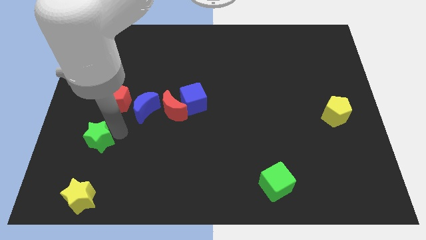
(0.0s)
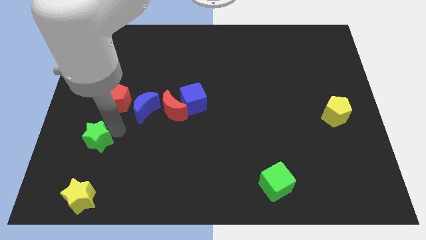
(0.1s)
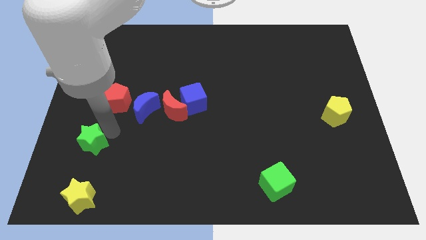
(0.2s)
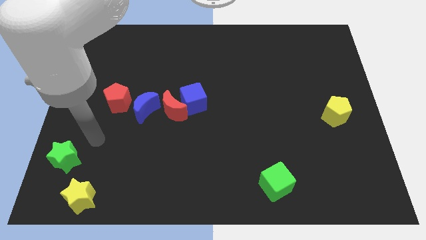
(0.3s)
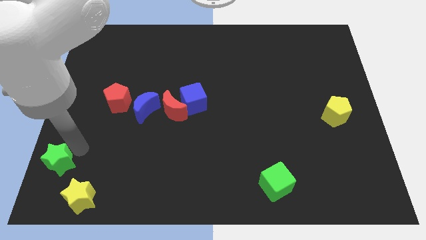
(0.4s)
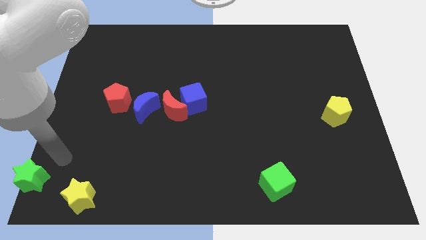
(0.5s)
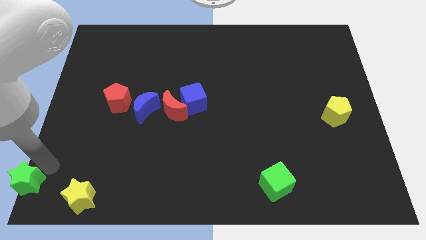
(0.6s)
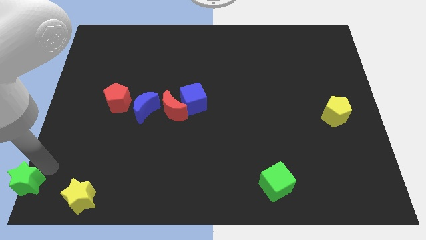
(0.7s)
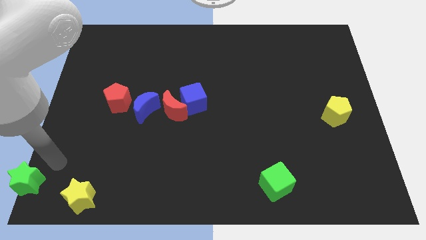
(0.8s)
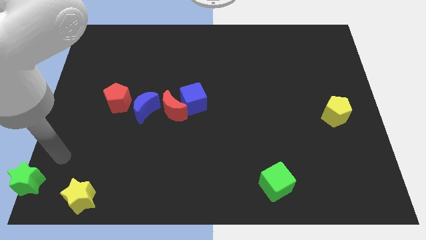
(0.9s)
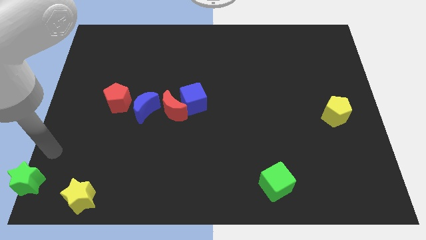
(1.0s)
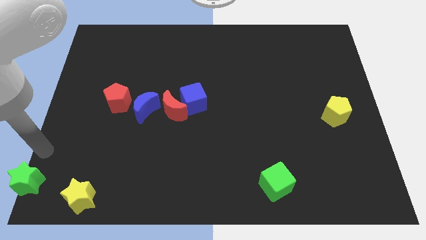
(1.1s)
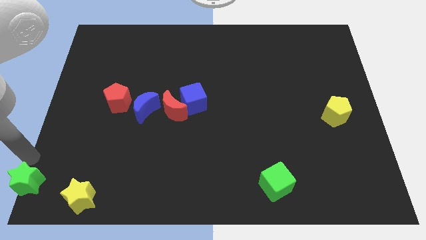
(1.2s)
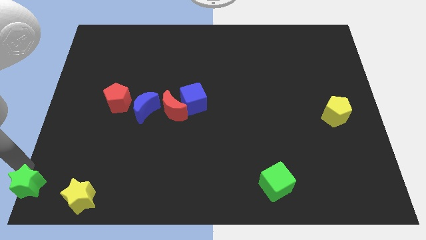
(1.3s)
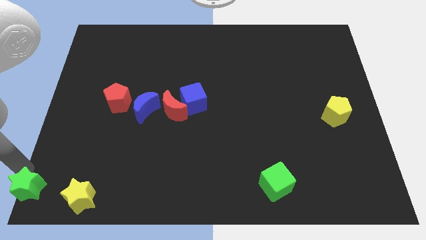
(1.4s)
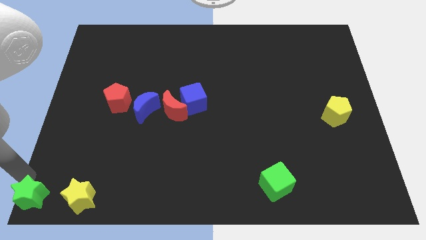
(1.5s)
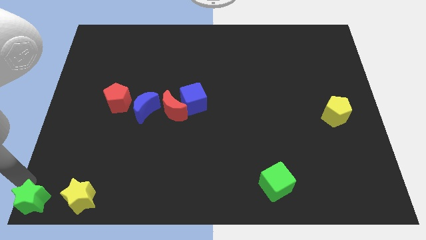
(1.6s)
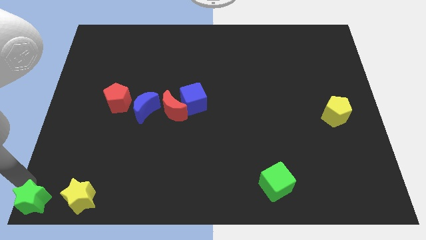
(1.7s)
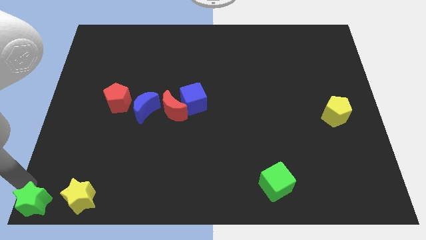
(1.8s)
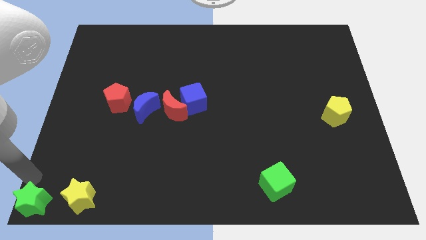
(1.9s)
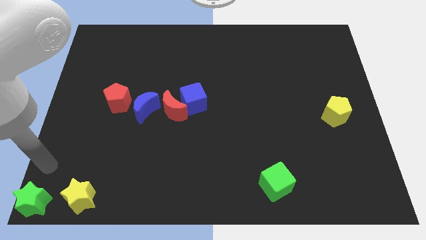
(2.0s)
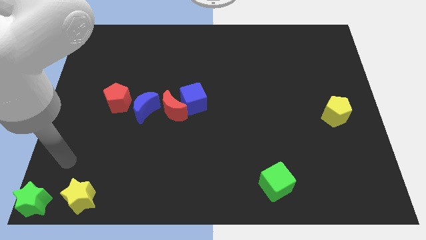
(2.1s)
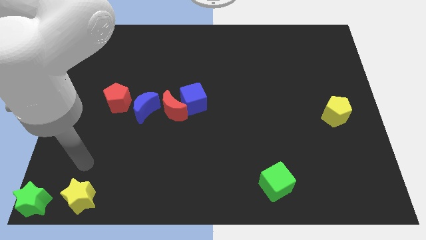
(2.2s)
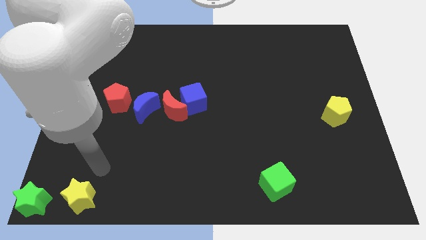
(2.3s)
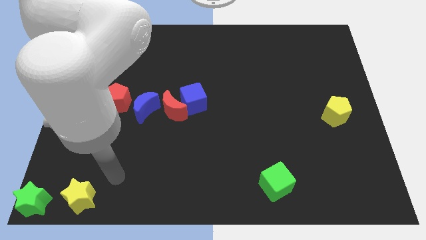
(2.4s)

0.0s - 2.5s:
place the green star at the bottom left corner

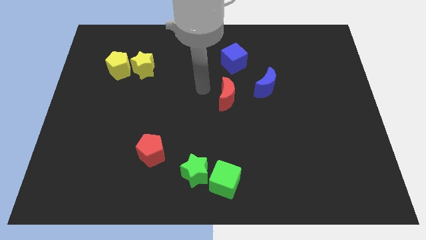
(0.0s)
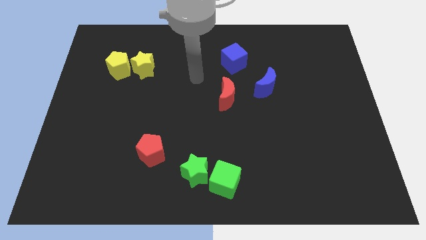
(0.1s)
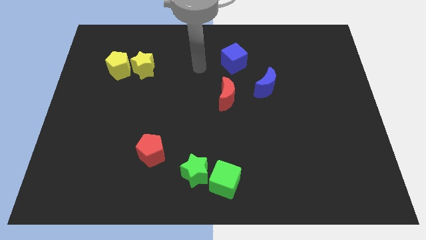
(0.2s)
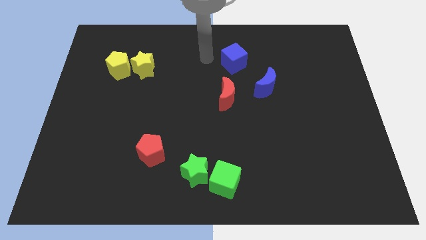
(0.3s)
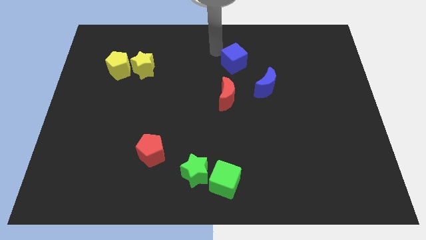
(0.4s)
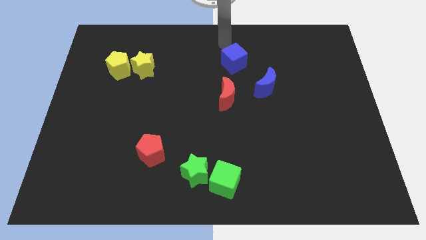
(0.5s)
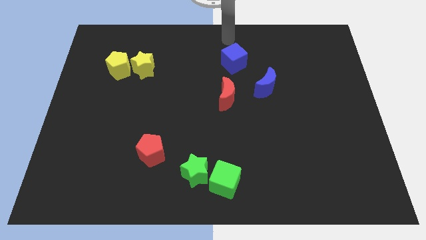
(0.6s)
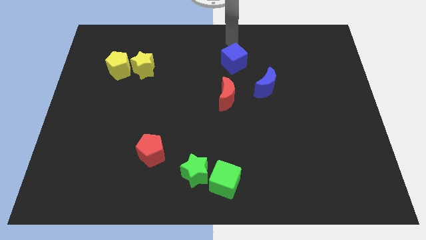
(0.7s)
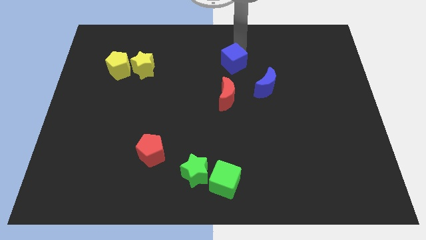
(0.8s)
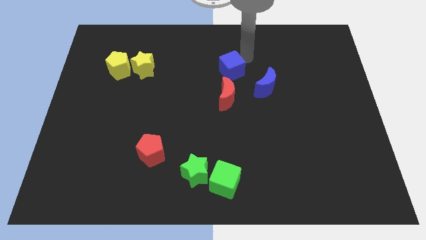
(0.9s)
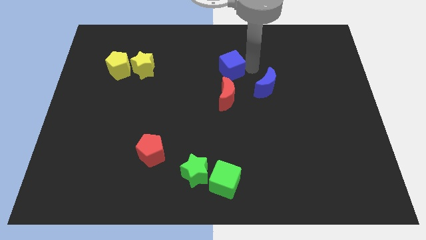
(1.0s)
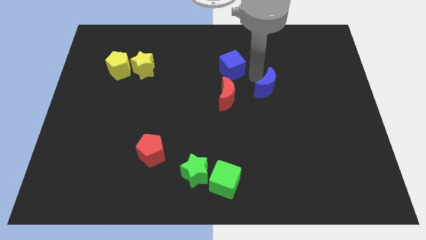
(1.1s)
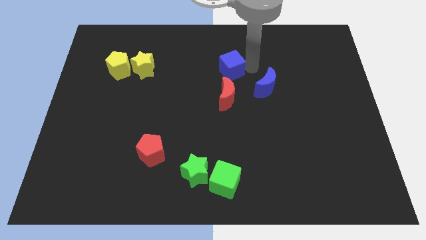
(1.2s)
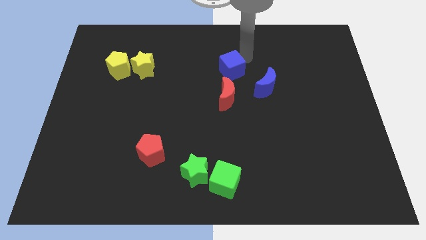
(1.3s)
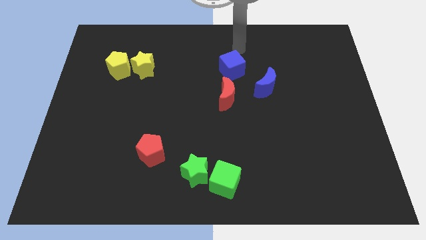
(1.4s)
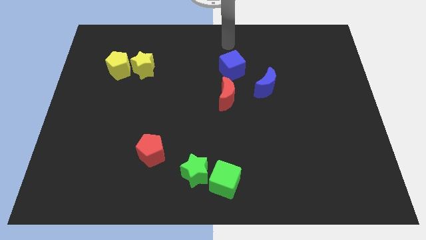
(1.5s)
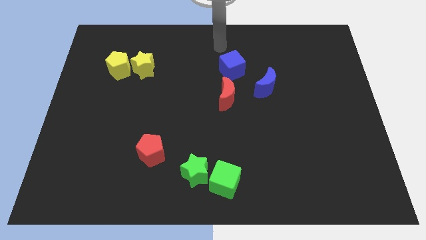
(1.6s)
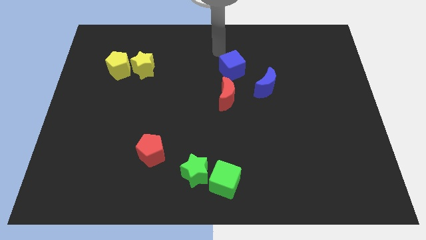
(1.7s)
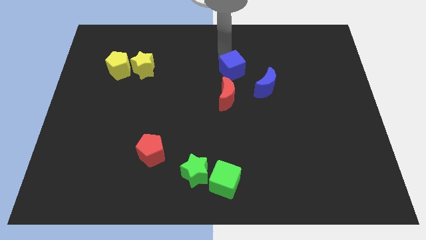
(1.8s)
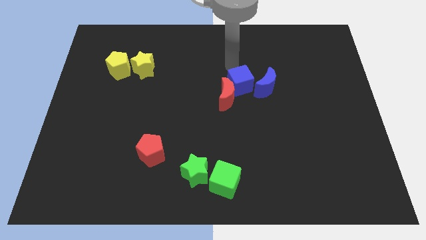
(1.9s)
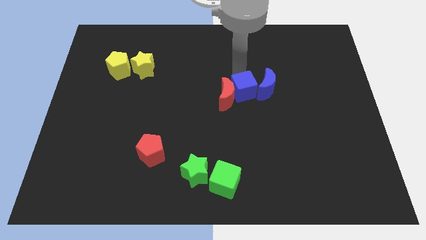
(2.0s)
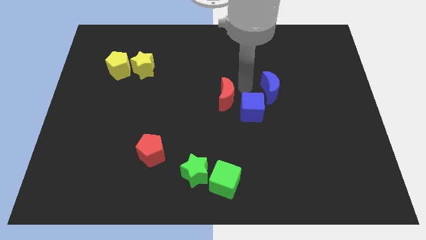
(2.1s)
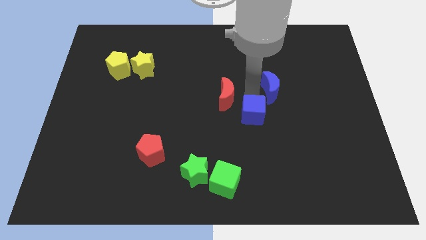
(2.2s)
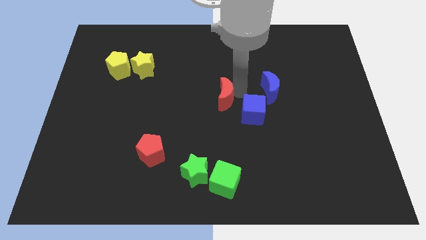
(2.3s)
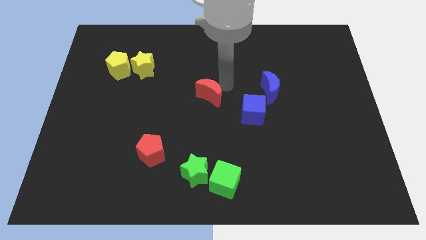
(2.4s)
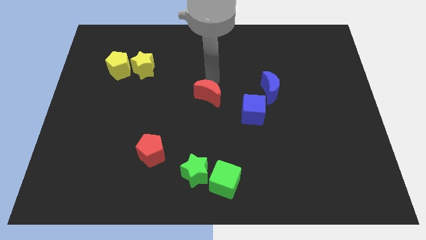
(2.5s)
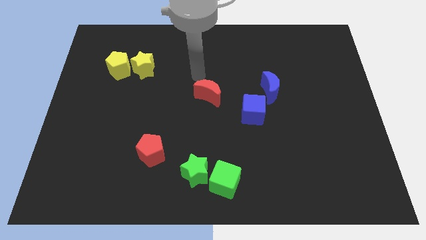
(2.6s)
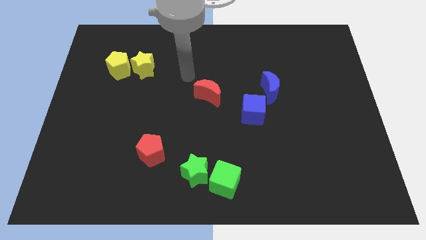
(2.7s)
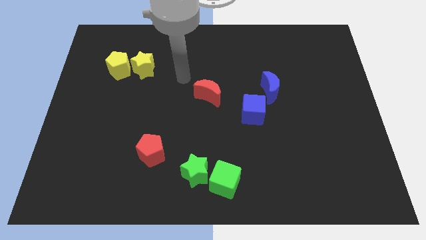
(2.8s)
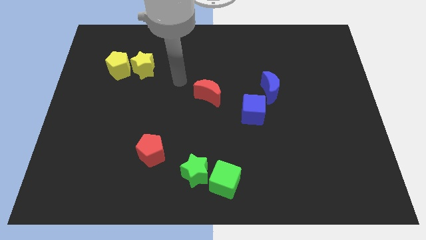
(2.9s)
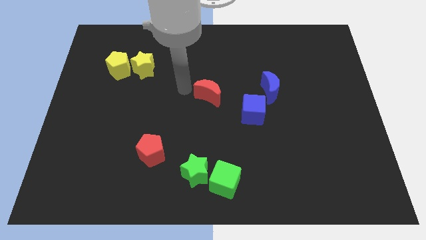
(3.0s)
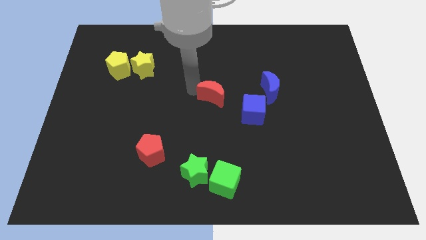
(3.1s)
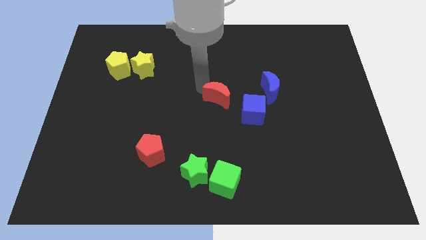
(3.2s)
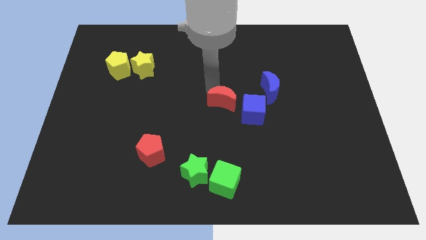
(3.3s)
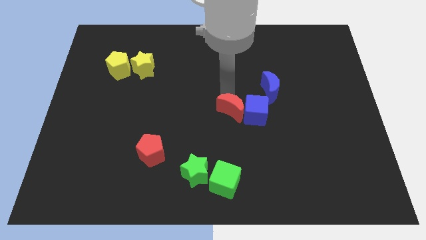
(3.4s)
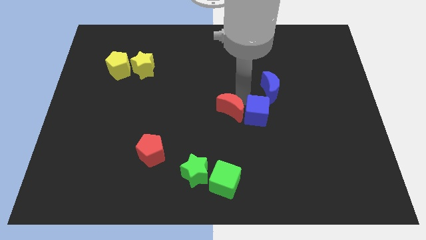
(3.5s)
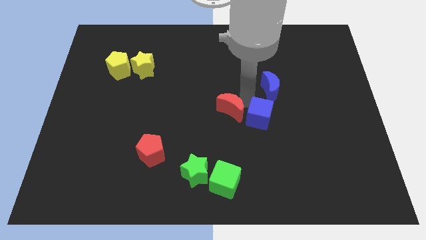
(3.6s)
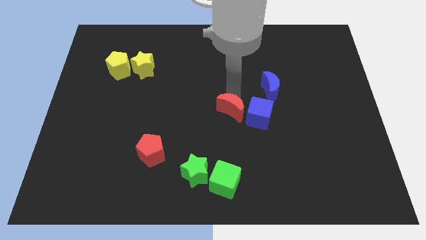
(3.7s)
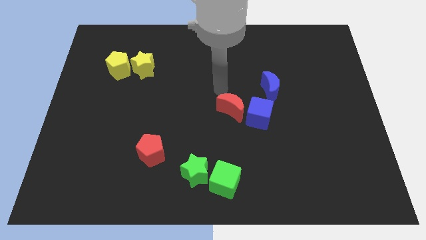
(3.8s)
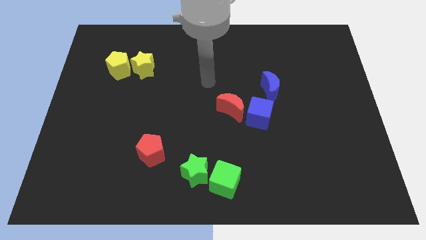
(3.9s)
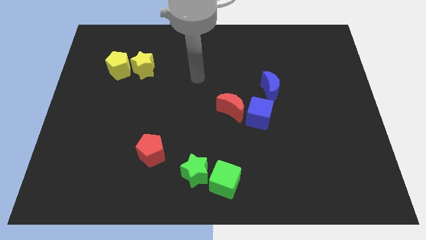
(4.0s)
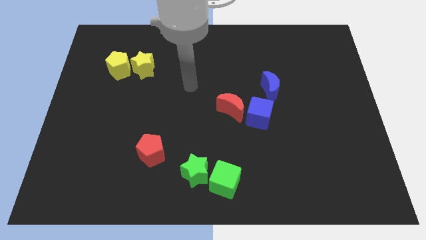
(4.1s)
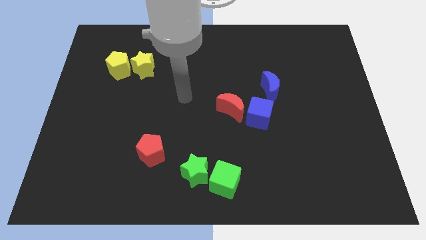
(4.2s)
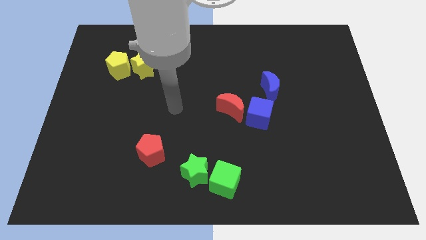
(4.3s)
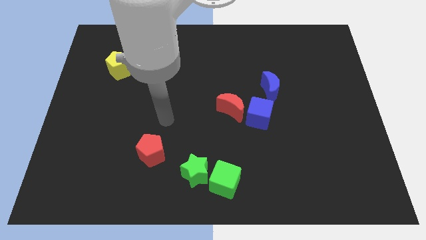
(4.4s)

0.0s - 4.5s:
place the blue cube to the left of red moon

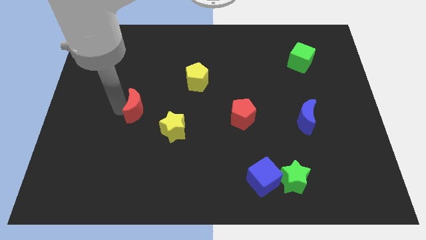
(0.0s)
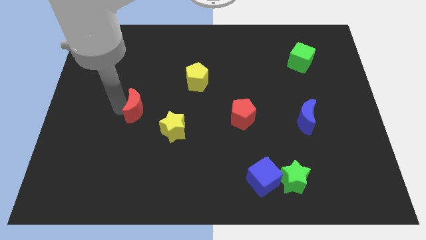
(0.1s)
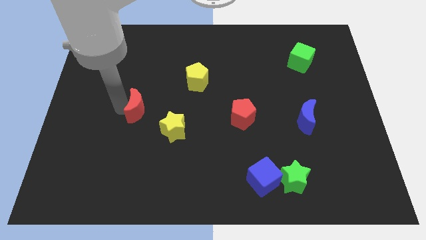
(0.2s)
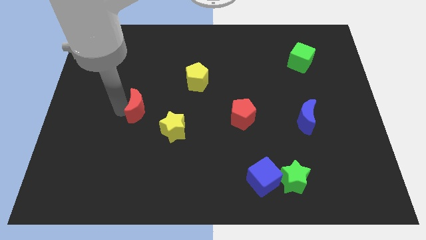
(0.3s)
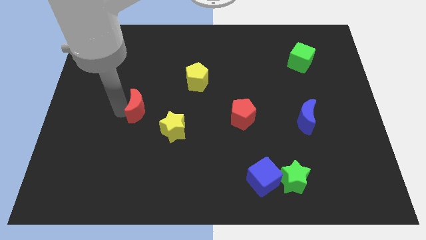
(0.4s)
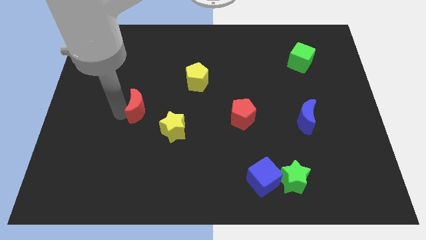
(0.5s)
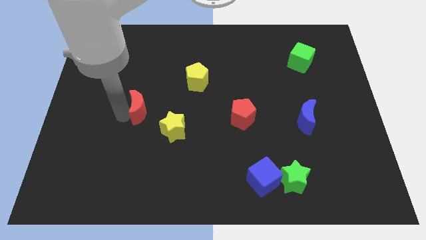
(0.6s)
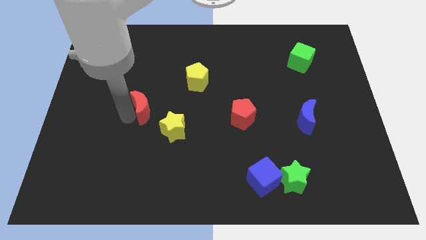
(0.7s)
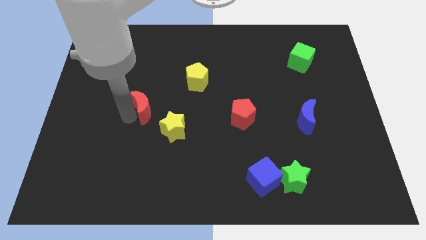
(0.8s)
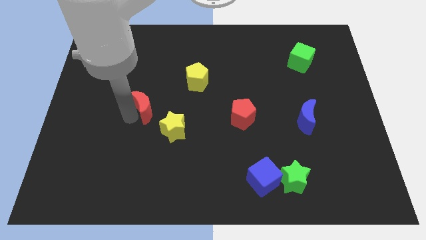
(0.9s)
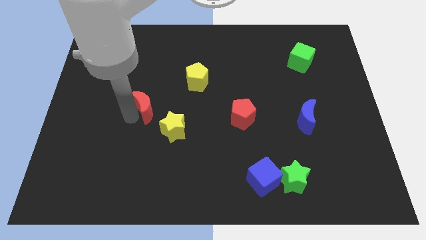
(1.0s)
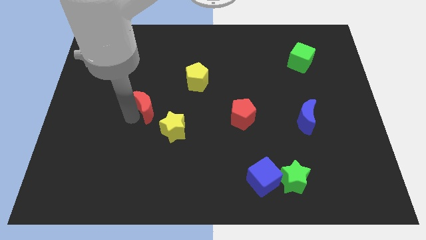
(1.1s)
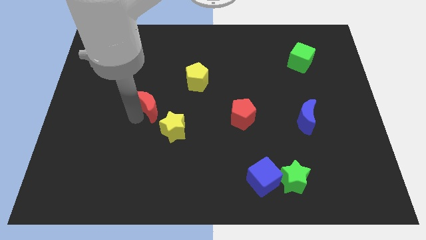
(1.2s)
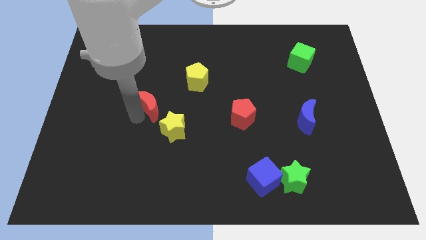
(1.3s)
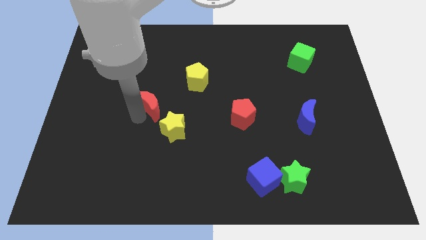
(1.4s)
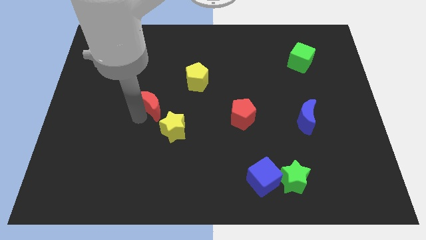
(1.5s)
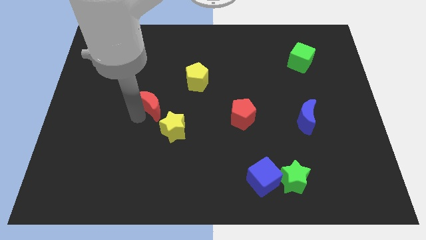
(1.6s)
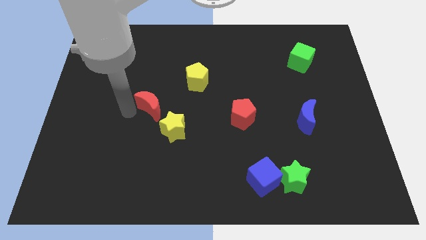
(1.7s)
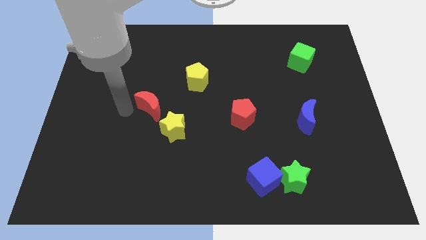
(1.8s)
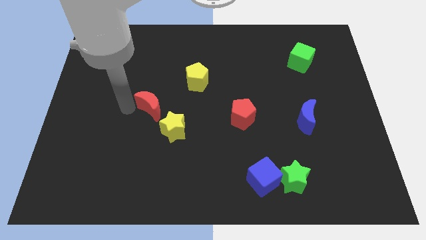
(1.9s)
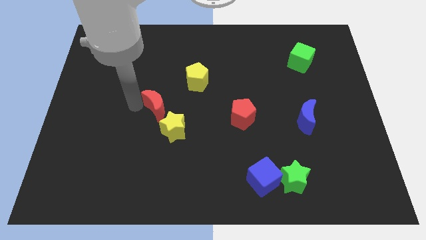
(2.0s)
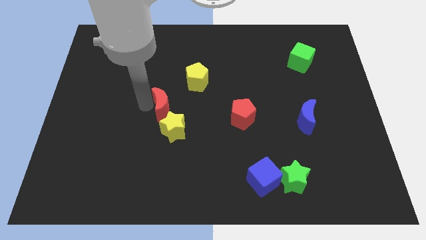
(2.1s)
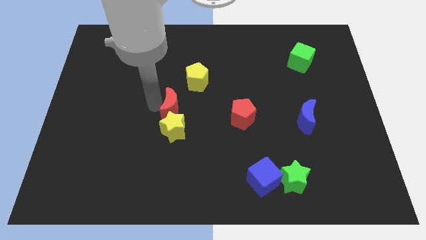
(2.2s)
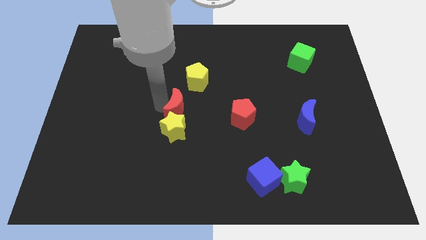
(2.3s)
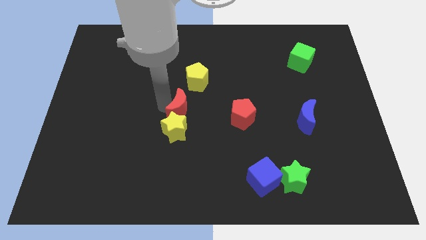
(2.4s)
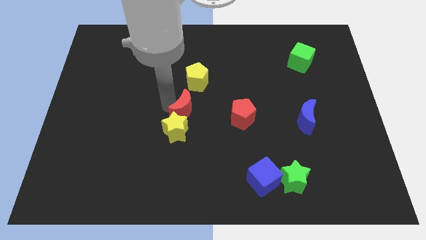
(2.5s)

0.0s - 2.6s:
place the red crescent above the yellow star
